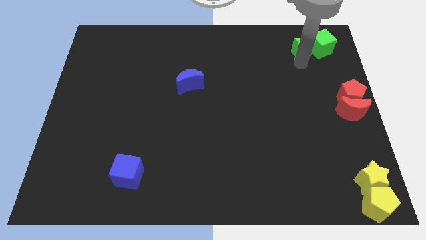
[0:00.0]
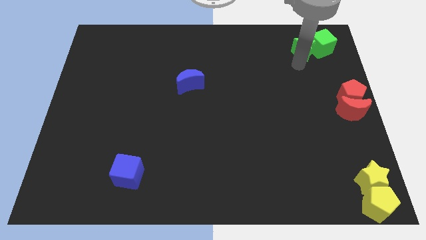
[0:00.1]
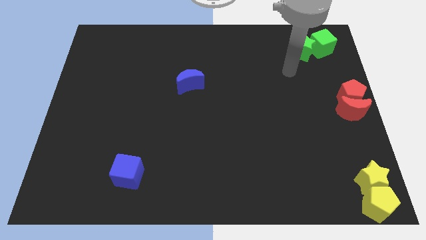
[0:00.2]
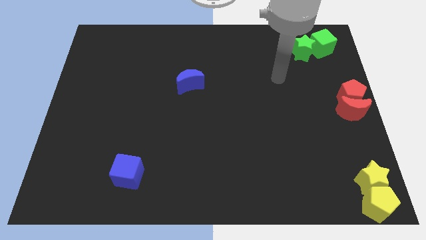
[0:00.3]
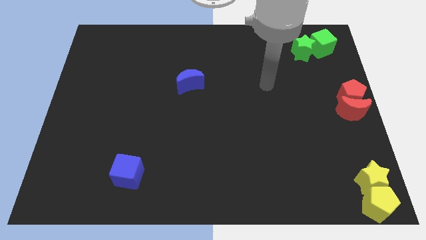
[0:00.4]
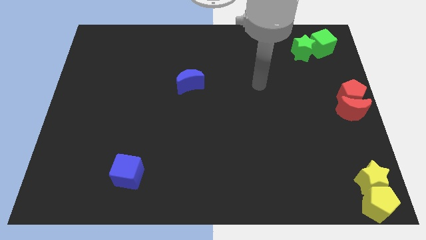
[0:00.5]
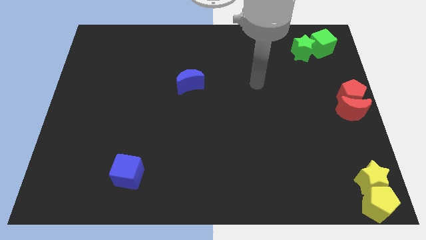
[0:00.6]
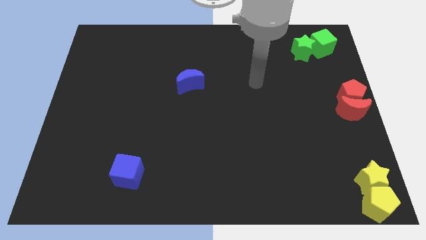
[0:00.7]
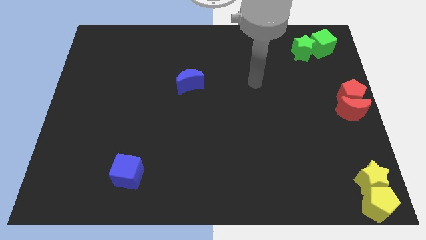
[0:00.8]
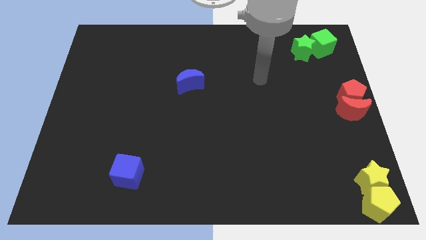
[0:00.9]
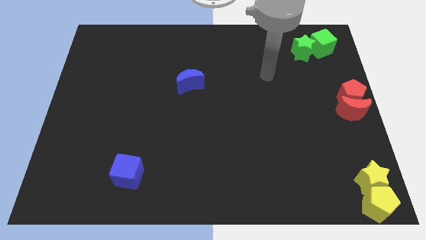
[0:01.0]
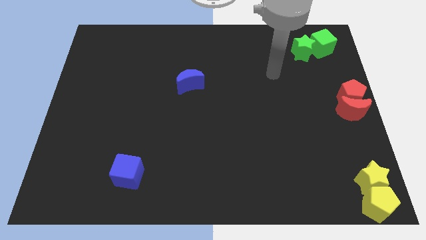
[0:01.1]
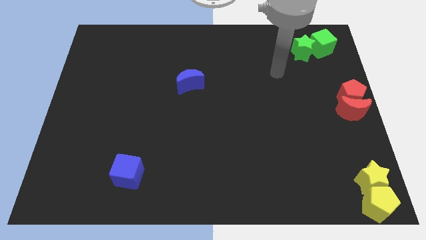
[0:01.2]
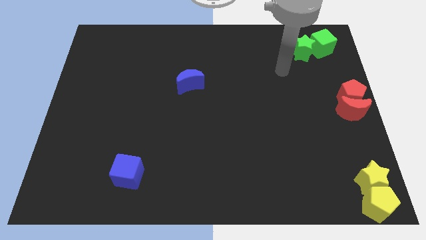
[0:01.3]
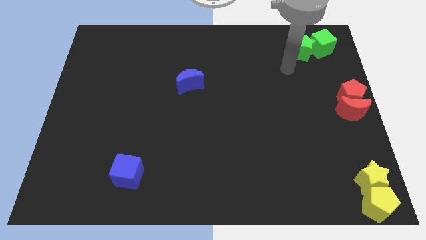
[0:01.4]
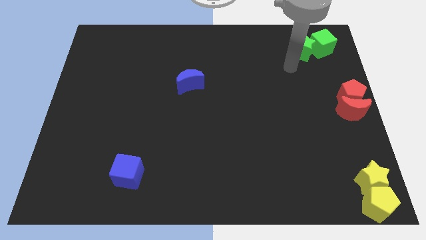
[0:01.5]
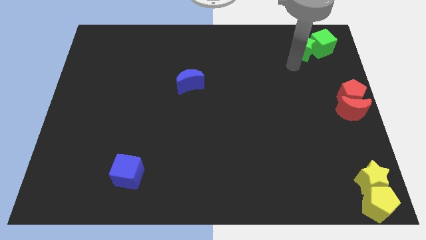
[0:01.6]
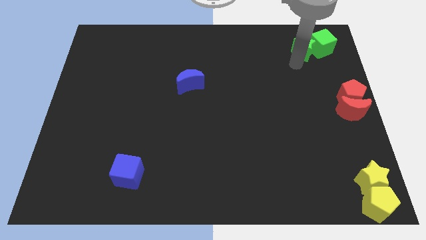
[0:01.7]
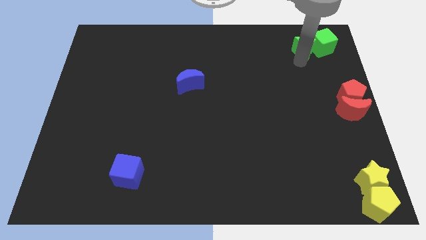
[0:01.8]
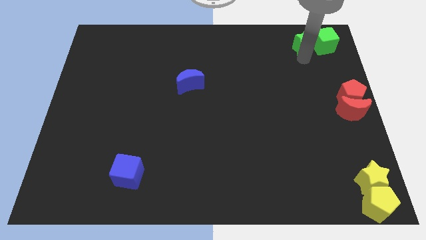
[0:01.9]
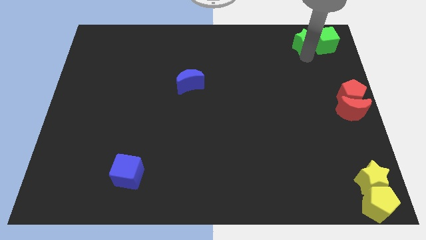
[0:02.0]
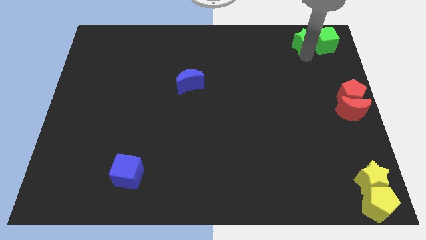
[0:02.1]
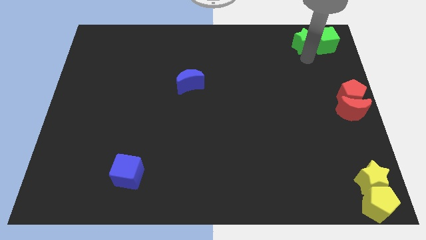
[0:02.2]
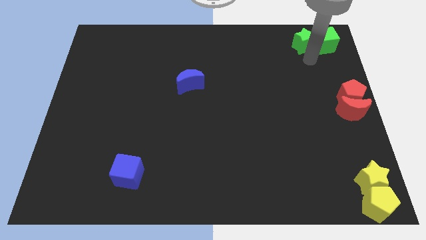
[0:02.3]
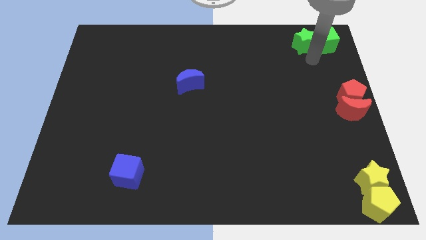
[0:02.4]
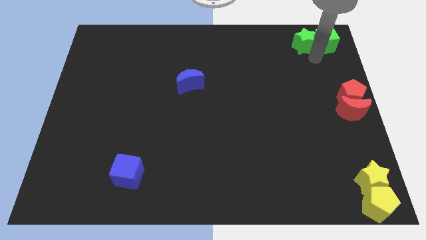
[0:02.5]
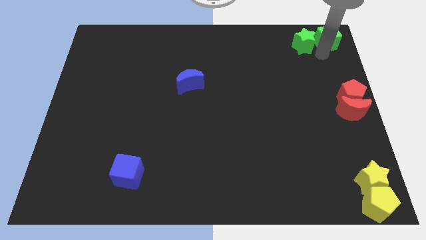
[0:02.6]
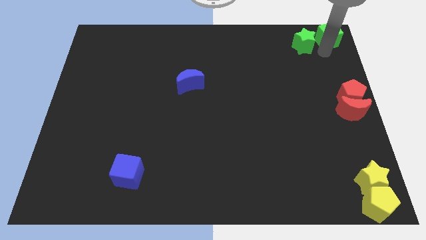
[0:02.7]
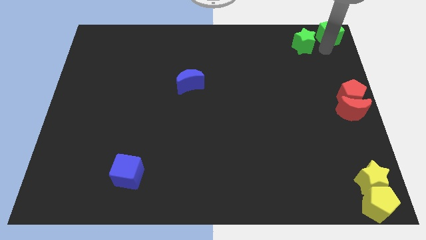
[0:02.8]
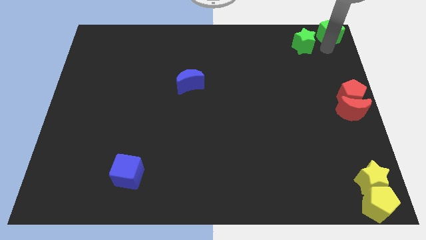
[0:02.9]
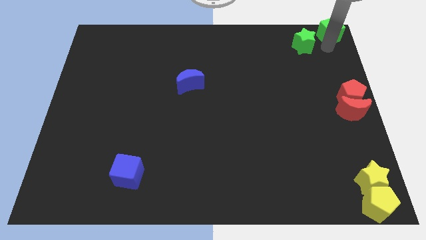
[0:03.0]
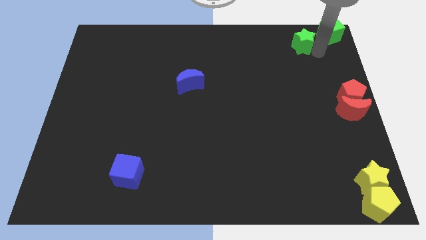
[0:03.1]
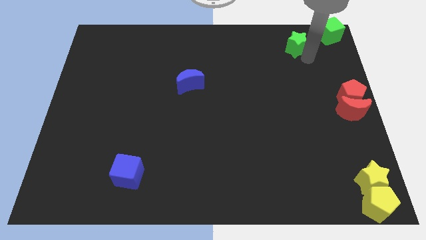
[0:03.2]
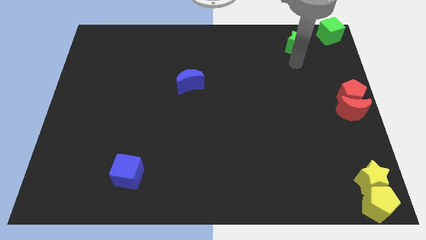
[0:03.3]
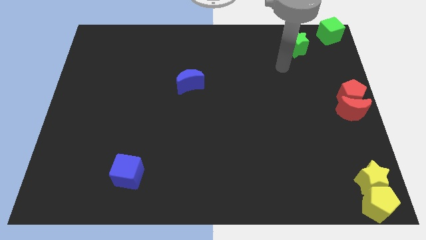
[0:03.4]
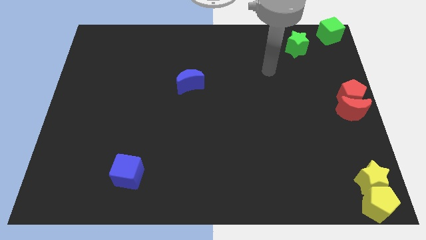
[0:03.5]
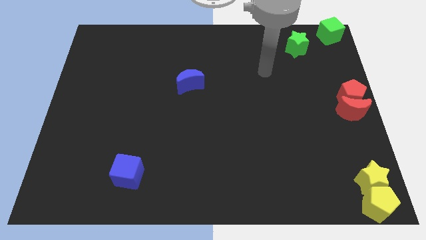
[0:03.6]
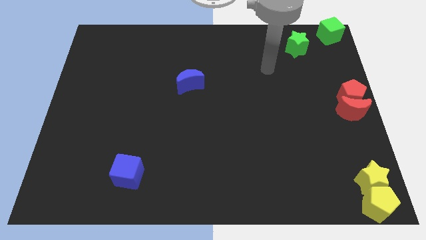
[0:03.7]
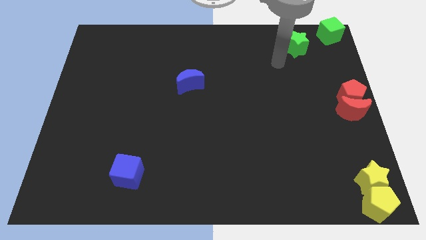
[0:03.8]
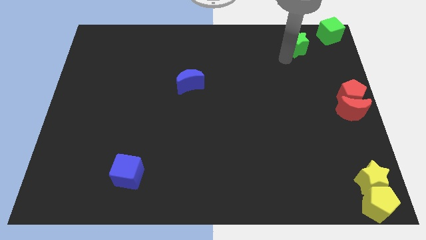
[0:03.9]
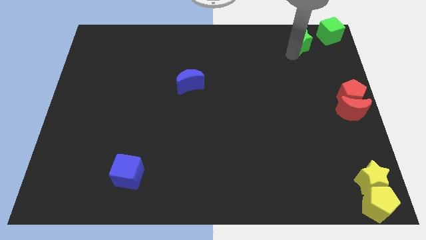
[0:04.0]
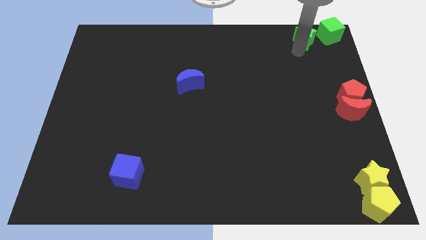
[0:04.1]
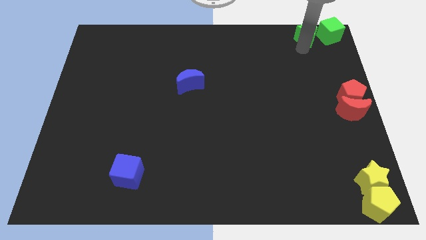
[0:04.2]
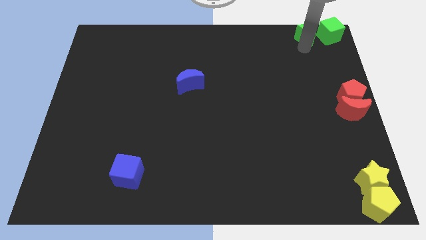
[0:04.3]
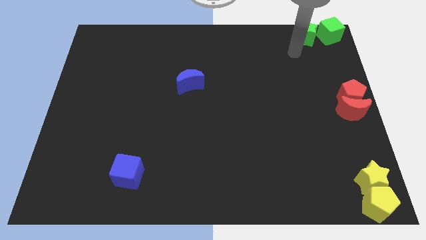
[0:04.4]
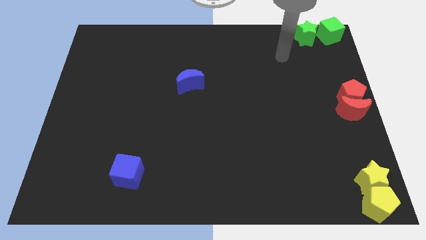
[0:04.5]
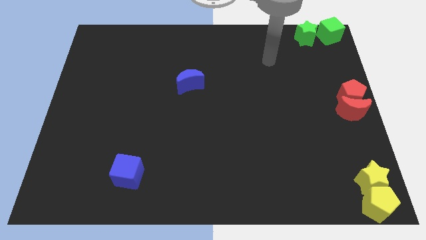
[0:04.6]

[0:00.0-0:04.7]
place the green star along with the green cube at the top right corner

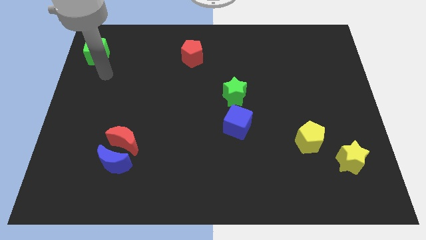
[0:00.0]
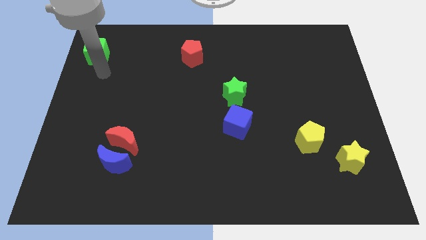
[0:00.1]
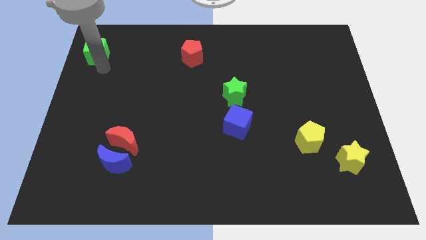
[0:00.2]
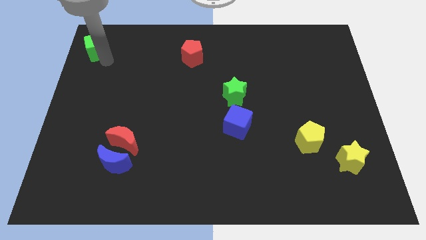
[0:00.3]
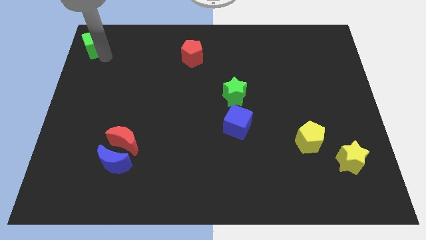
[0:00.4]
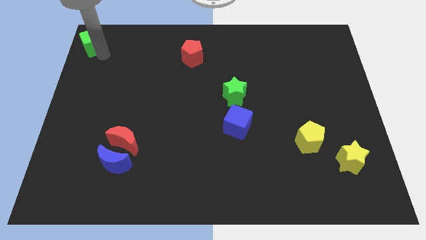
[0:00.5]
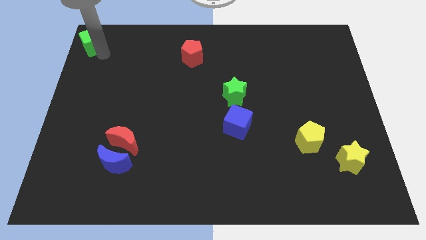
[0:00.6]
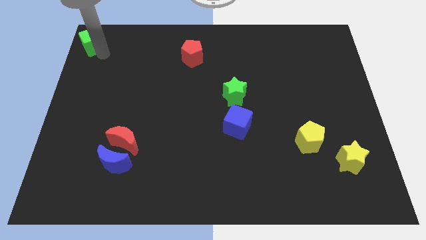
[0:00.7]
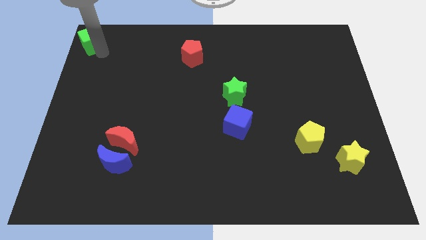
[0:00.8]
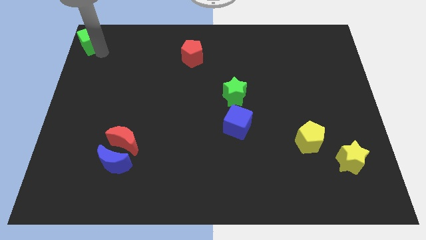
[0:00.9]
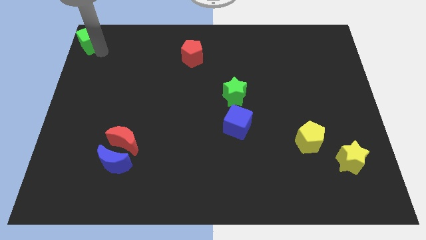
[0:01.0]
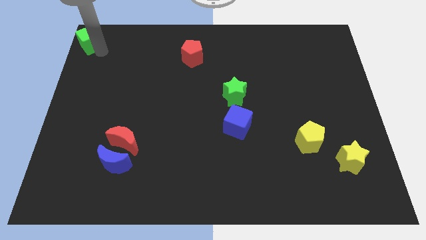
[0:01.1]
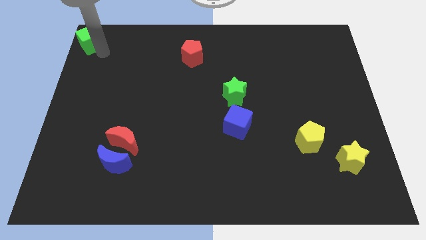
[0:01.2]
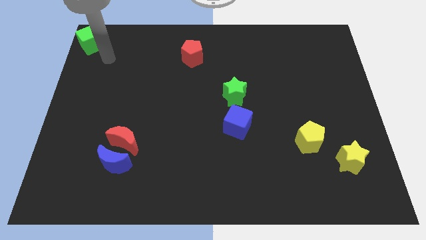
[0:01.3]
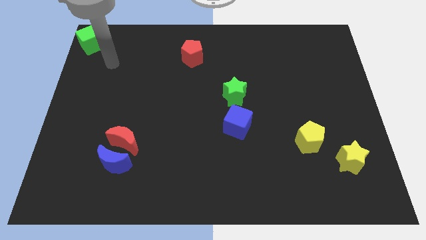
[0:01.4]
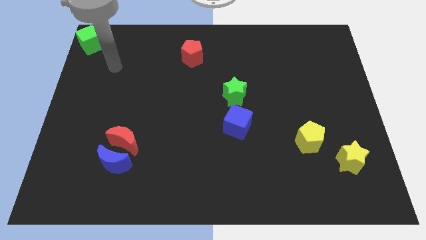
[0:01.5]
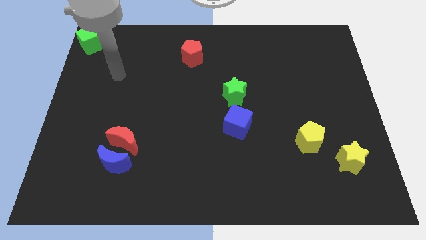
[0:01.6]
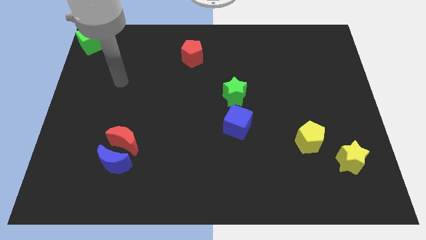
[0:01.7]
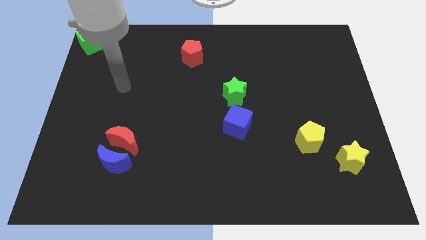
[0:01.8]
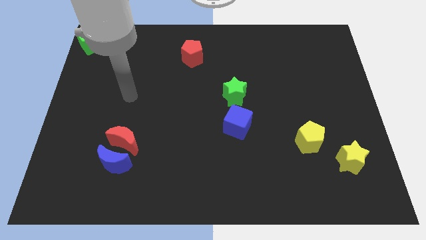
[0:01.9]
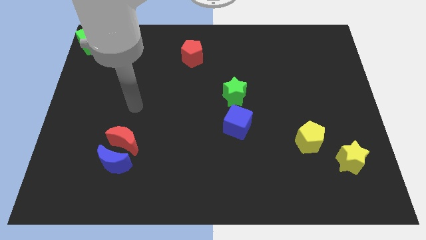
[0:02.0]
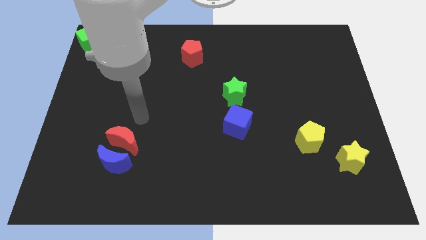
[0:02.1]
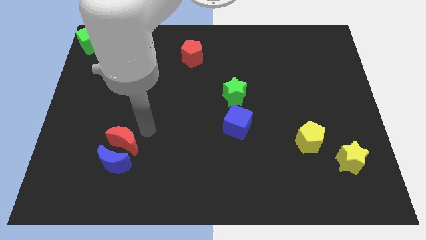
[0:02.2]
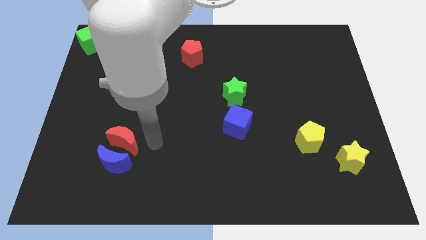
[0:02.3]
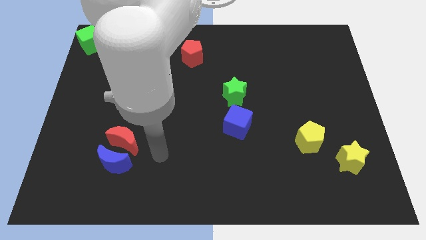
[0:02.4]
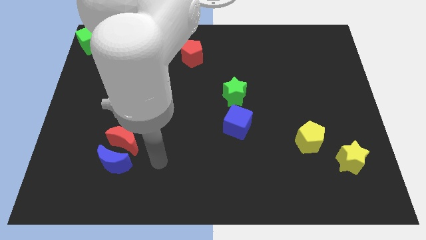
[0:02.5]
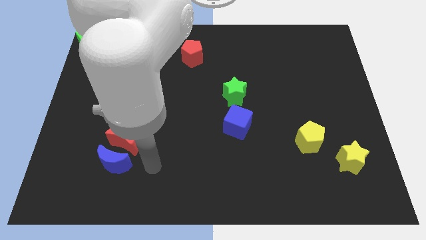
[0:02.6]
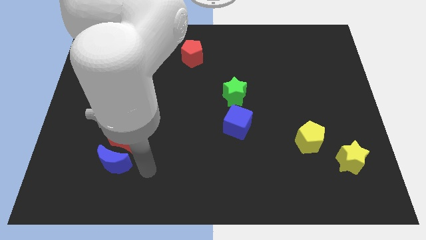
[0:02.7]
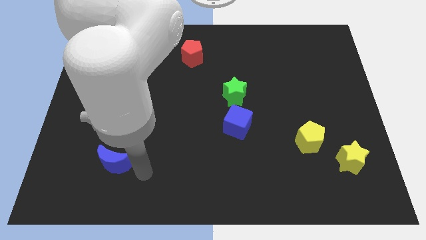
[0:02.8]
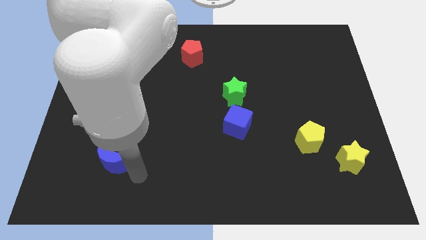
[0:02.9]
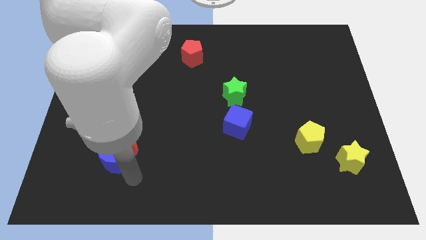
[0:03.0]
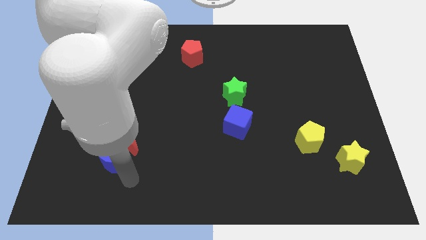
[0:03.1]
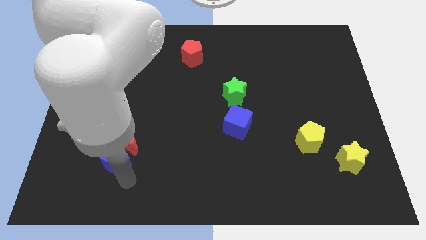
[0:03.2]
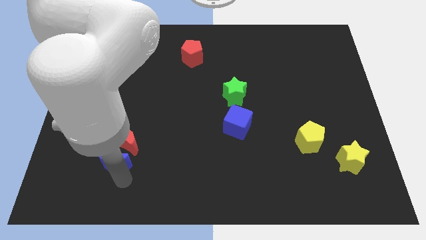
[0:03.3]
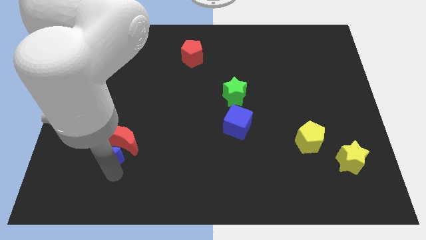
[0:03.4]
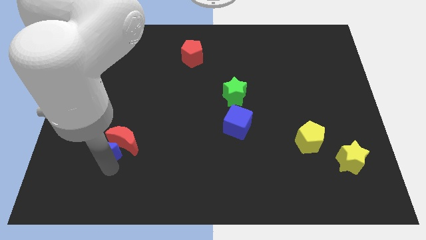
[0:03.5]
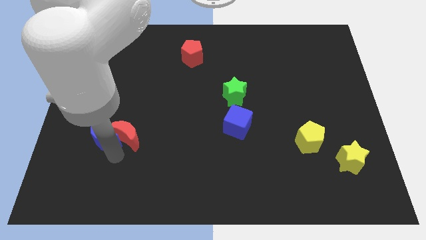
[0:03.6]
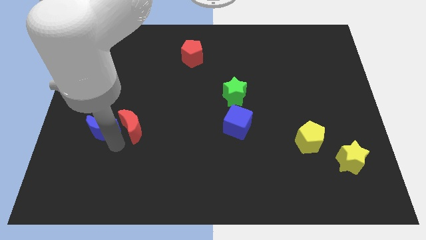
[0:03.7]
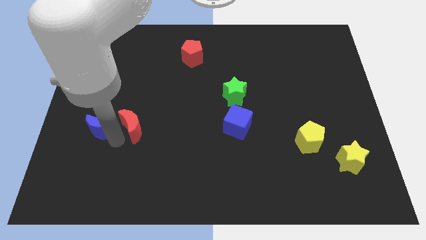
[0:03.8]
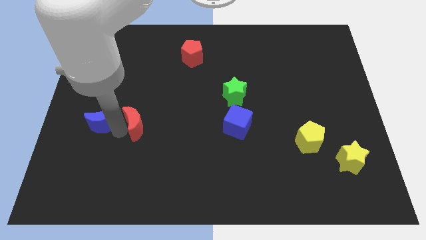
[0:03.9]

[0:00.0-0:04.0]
push the green cube and the blue moon towards up

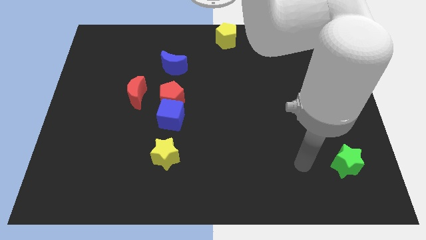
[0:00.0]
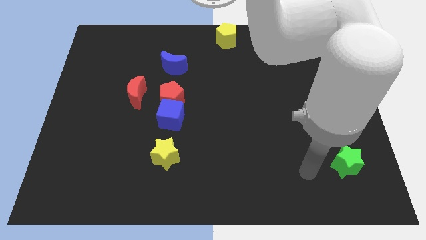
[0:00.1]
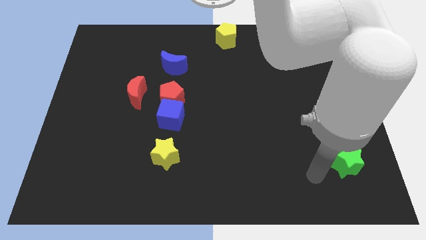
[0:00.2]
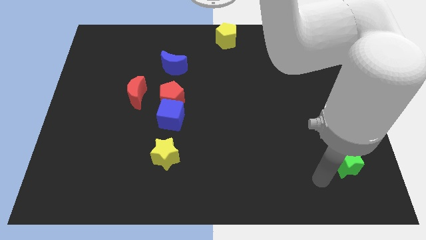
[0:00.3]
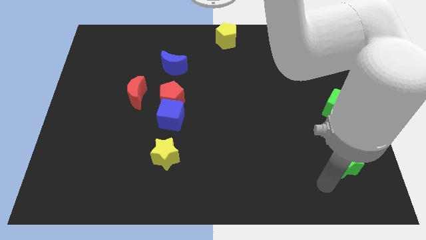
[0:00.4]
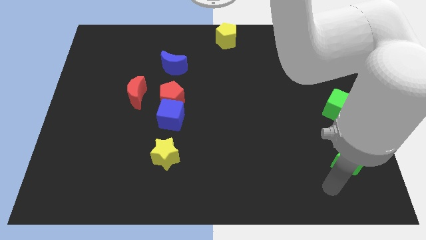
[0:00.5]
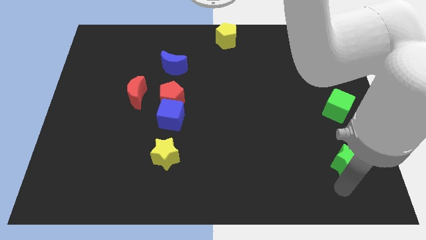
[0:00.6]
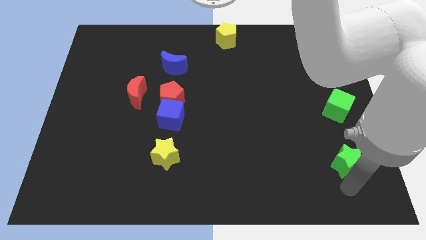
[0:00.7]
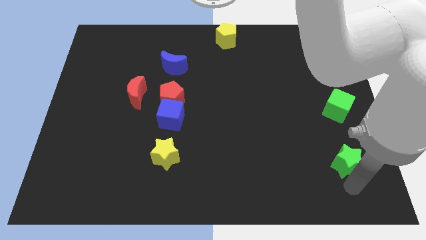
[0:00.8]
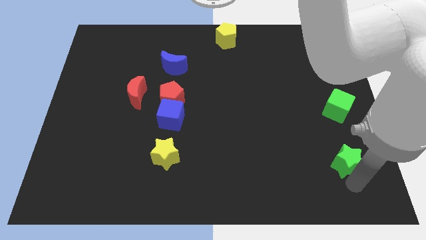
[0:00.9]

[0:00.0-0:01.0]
move your arm below the green star
